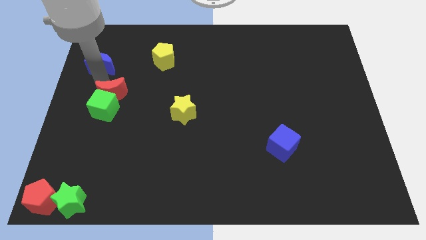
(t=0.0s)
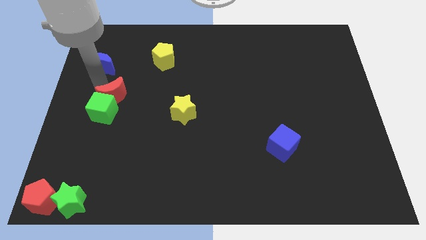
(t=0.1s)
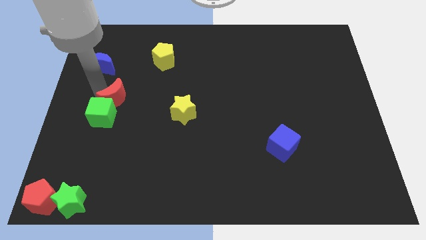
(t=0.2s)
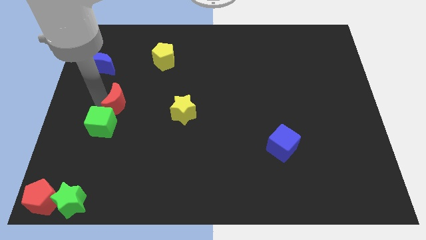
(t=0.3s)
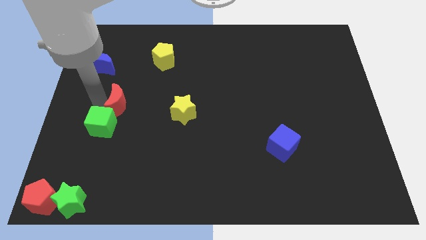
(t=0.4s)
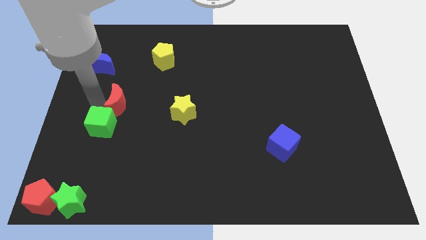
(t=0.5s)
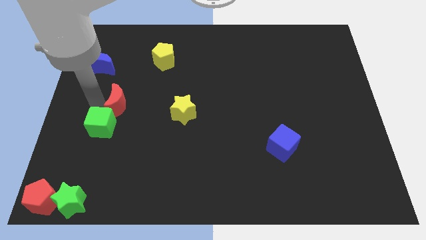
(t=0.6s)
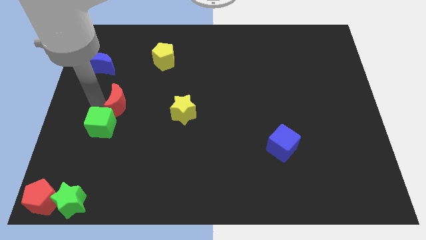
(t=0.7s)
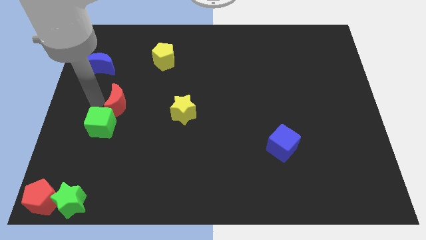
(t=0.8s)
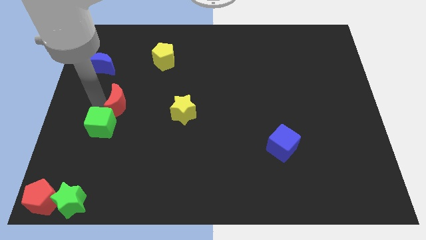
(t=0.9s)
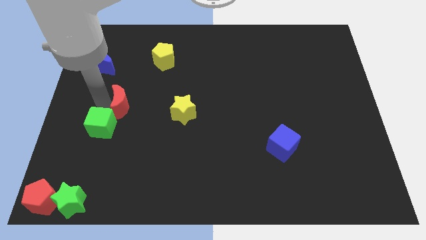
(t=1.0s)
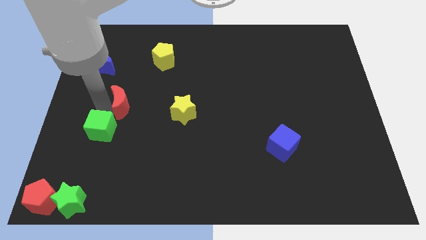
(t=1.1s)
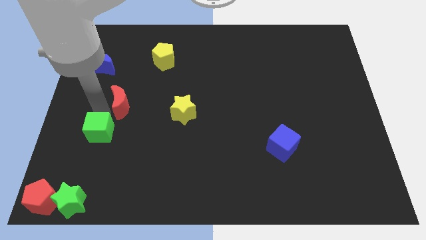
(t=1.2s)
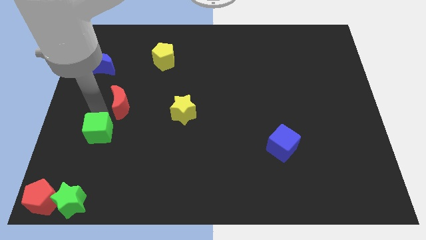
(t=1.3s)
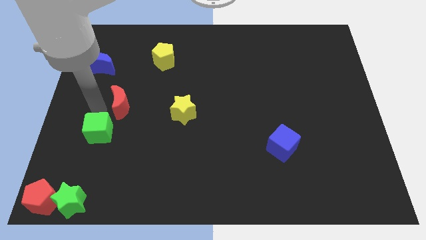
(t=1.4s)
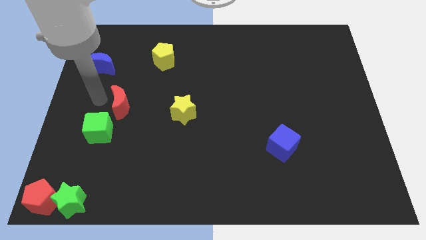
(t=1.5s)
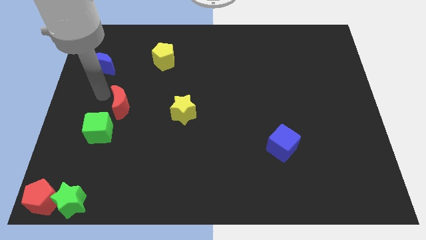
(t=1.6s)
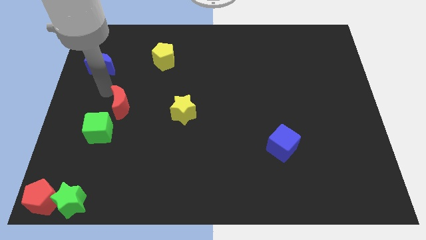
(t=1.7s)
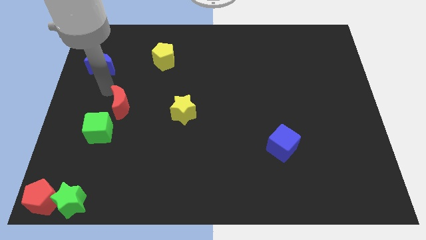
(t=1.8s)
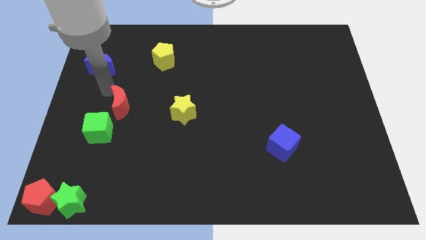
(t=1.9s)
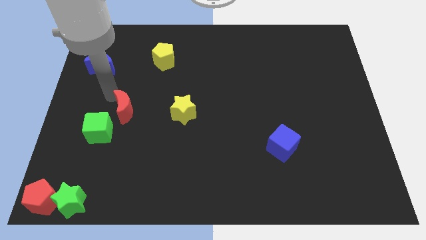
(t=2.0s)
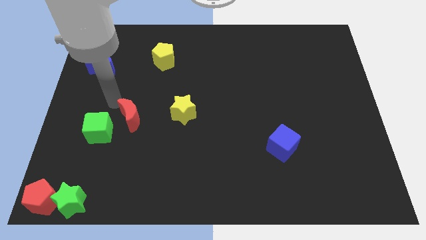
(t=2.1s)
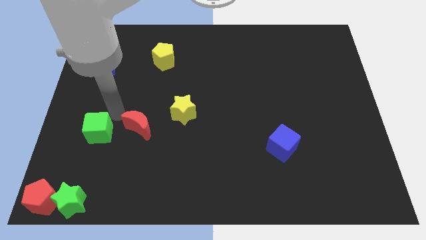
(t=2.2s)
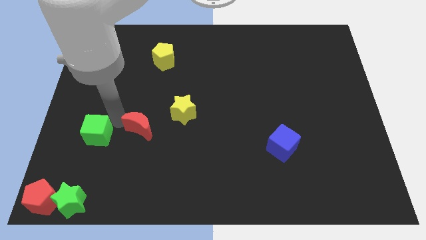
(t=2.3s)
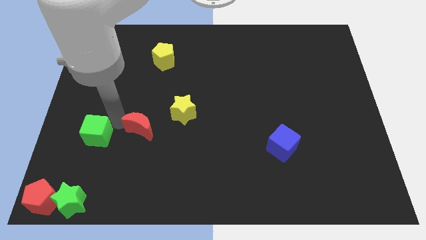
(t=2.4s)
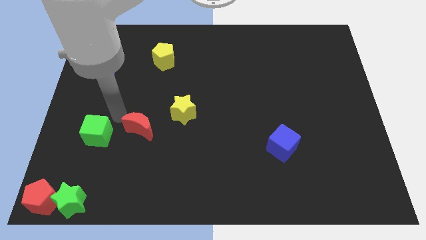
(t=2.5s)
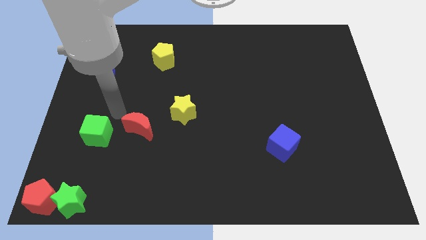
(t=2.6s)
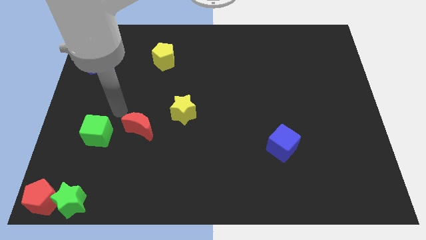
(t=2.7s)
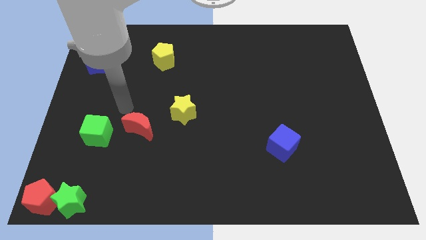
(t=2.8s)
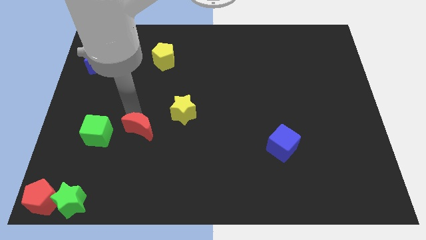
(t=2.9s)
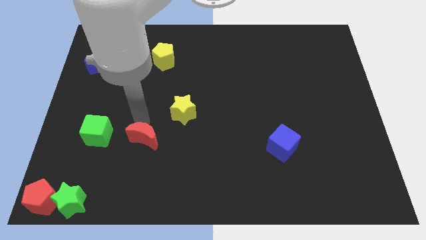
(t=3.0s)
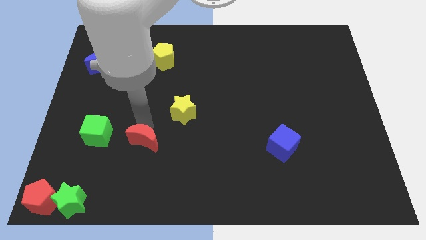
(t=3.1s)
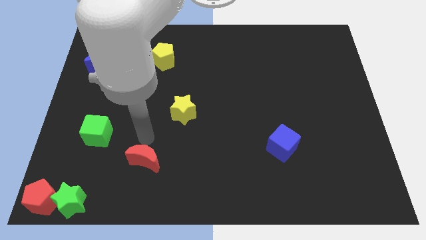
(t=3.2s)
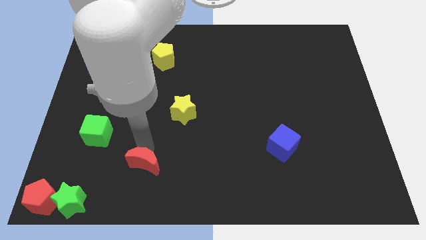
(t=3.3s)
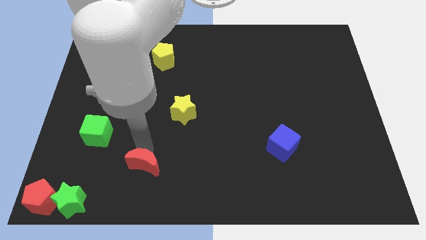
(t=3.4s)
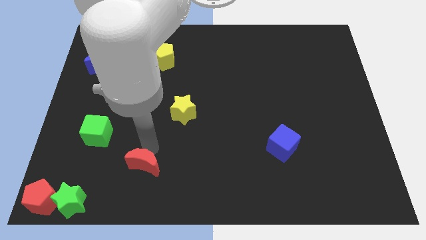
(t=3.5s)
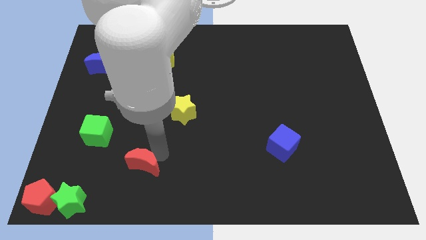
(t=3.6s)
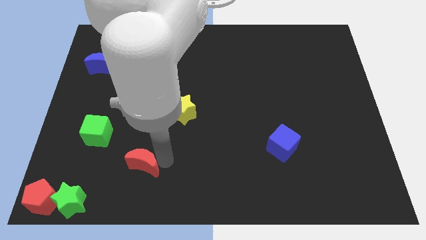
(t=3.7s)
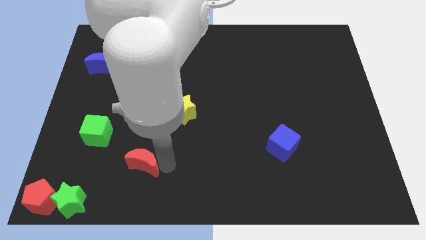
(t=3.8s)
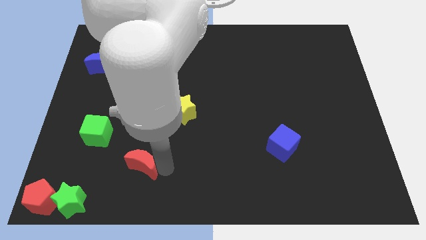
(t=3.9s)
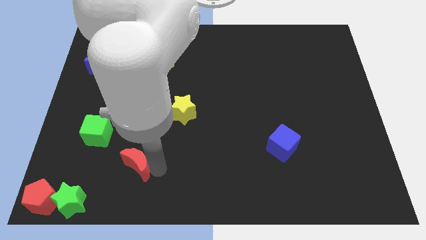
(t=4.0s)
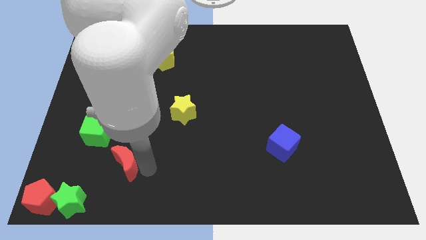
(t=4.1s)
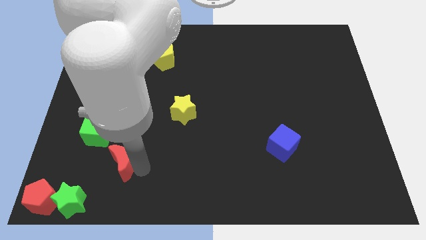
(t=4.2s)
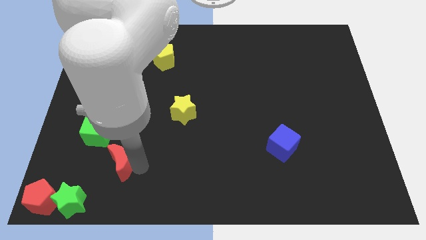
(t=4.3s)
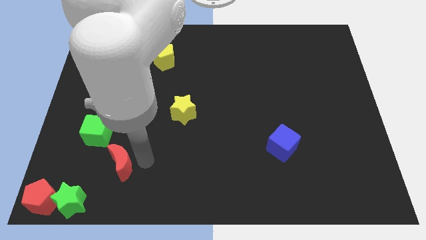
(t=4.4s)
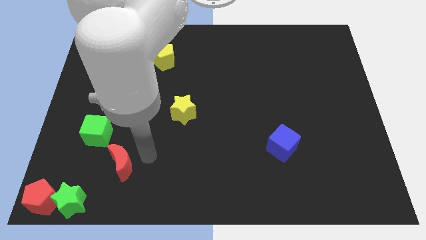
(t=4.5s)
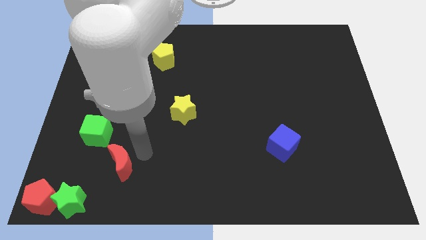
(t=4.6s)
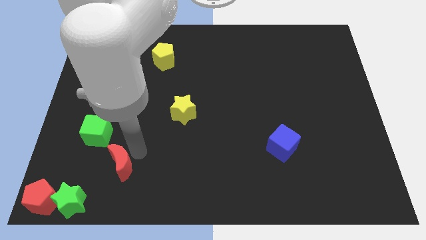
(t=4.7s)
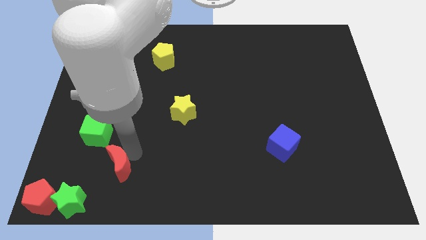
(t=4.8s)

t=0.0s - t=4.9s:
push the red moon to the bottom right side of the green cube

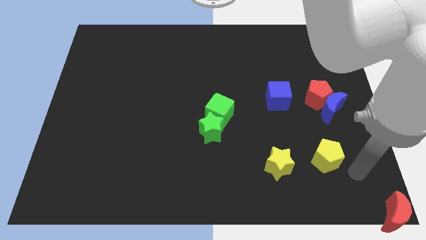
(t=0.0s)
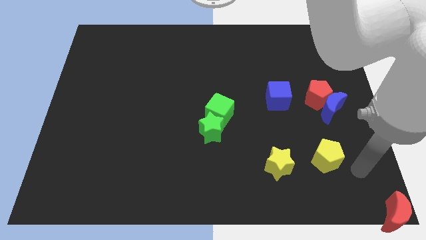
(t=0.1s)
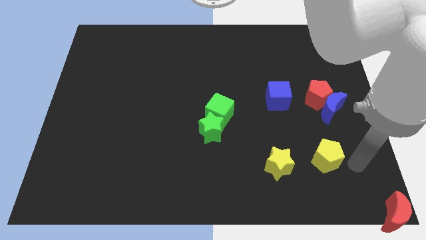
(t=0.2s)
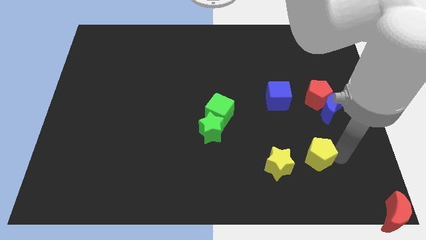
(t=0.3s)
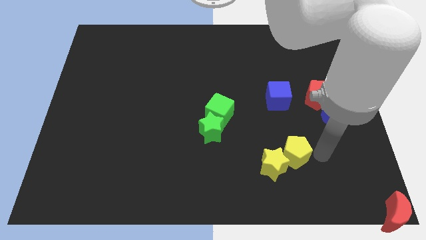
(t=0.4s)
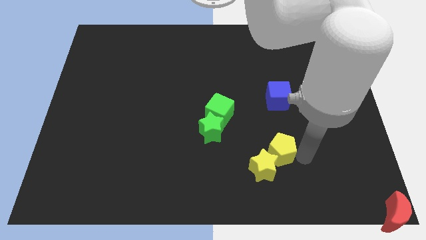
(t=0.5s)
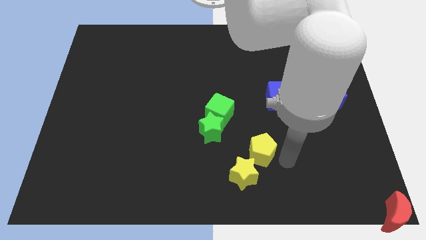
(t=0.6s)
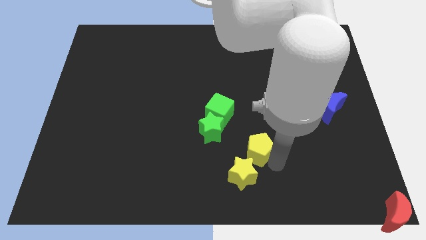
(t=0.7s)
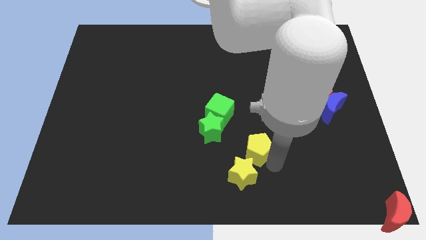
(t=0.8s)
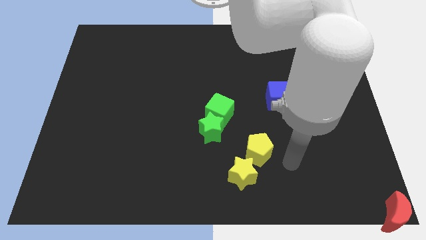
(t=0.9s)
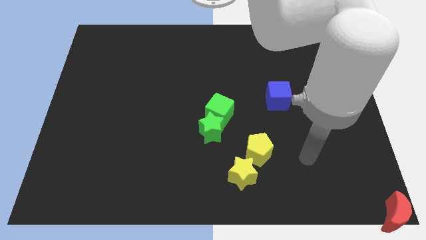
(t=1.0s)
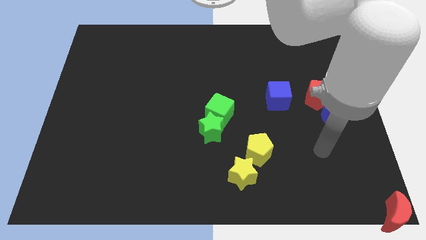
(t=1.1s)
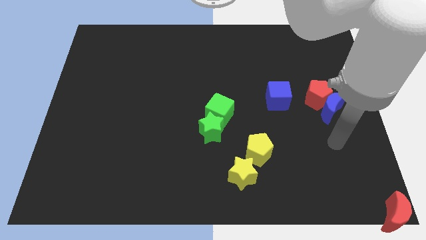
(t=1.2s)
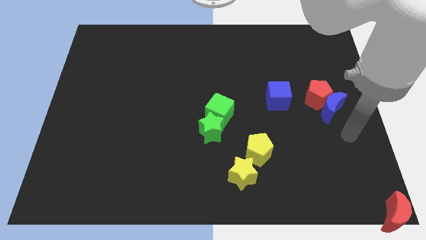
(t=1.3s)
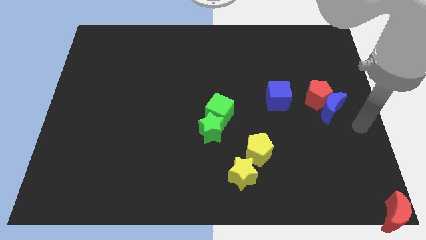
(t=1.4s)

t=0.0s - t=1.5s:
move the yellow blocks to the left of the board

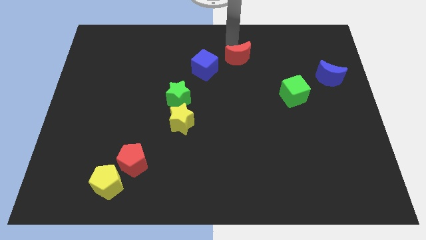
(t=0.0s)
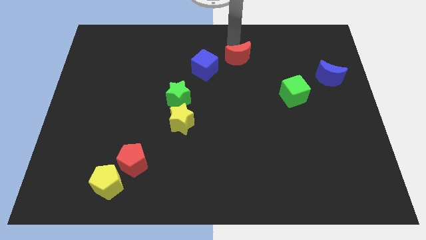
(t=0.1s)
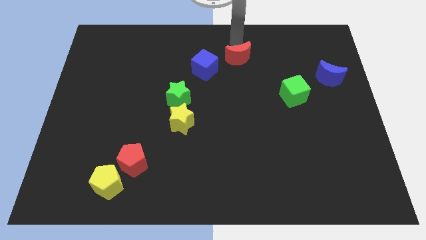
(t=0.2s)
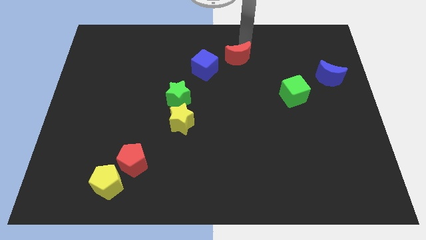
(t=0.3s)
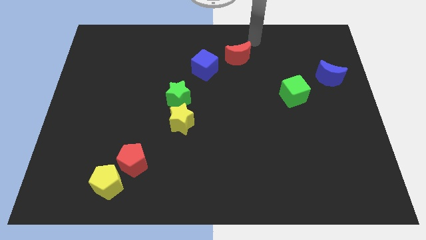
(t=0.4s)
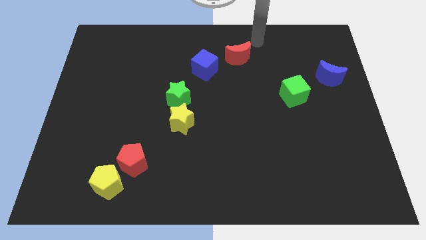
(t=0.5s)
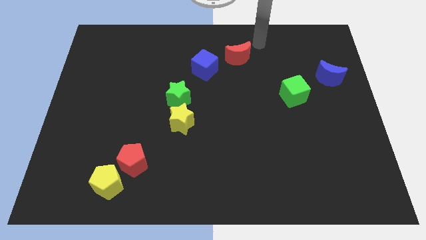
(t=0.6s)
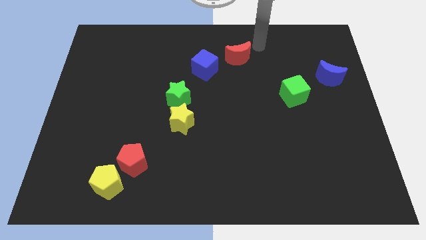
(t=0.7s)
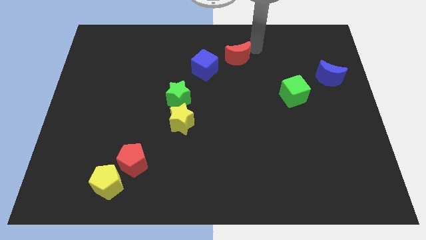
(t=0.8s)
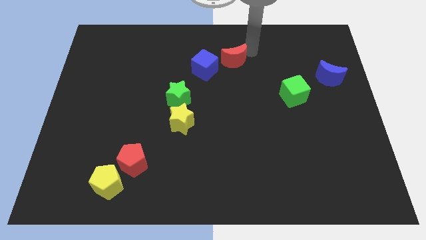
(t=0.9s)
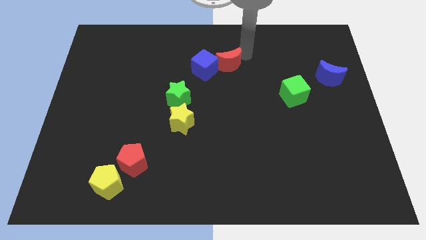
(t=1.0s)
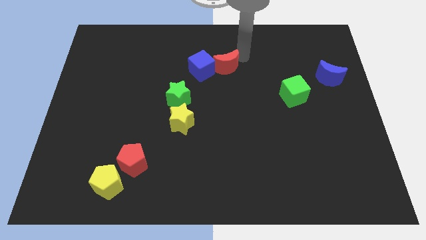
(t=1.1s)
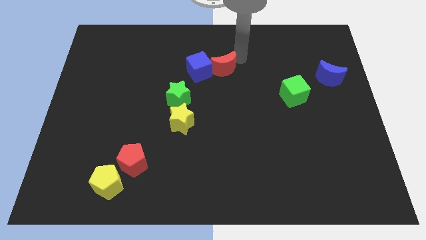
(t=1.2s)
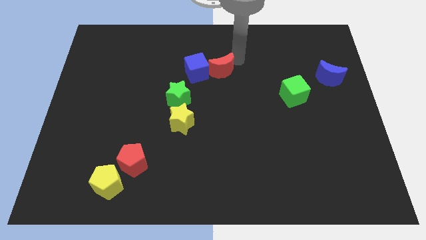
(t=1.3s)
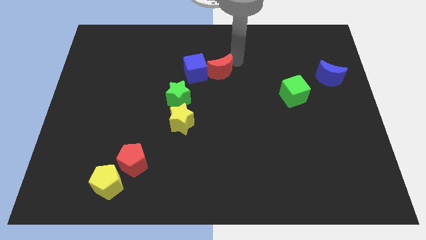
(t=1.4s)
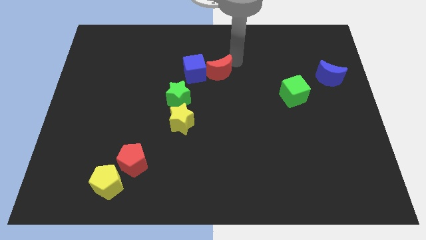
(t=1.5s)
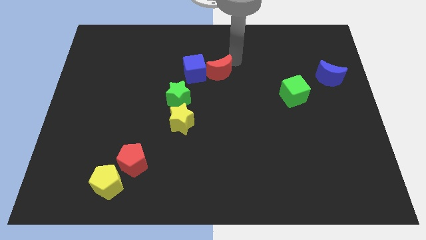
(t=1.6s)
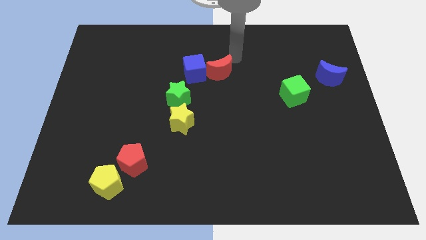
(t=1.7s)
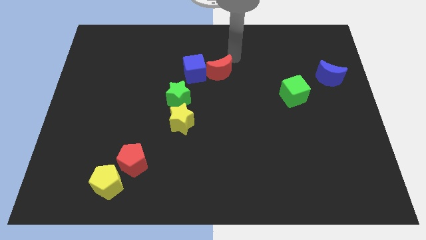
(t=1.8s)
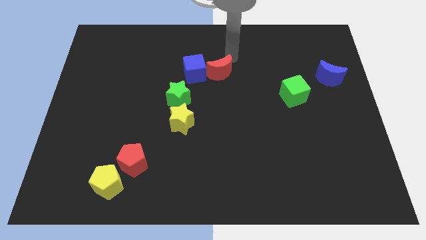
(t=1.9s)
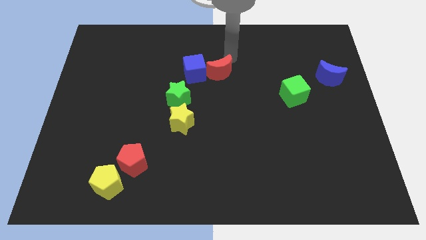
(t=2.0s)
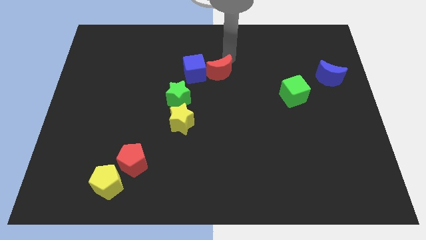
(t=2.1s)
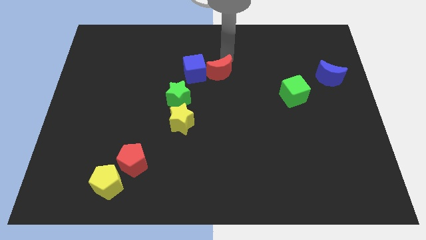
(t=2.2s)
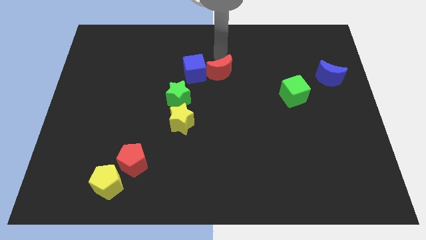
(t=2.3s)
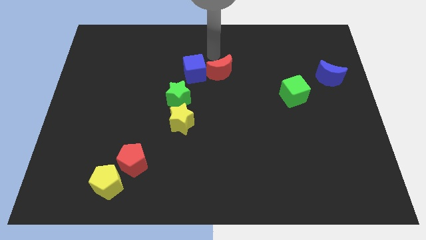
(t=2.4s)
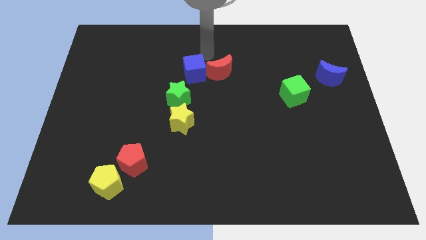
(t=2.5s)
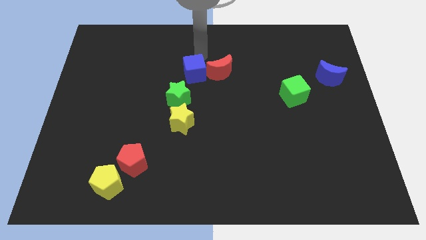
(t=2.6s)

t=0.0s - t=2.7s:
move blue cube and red moon slightly down
